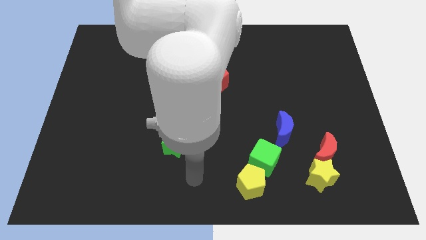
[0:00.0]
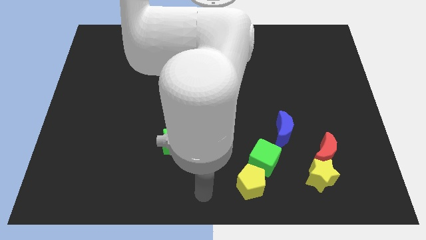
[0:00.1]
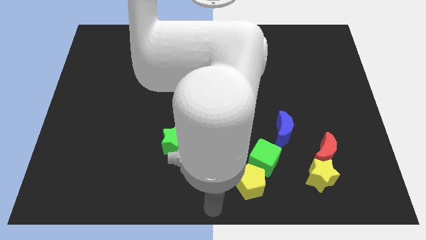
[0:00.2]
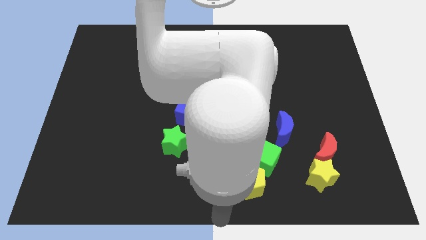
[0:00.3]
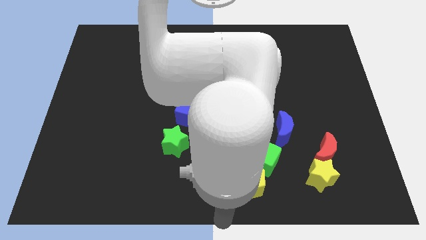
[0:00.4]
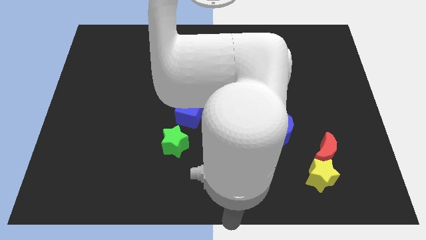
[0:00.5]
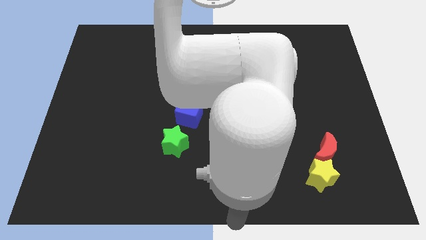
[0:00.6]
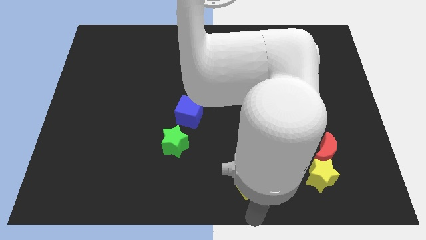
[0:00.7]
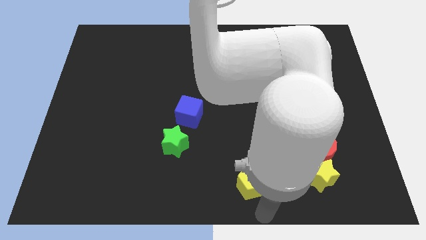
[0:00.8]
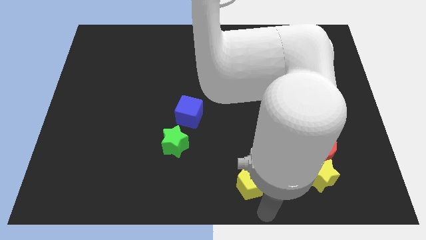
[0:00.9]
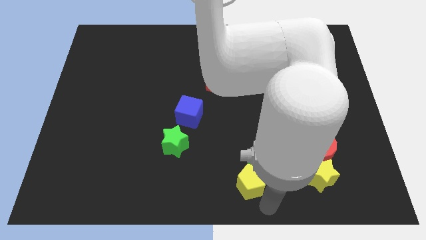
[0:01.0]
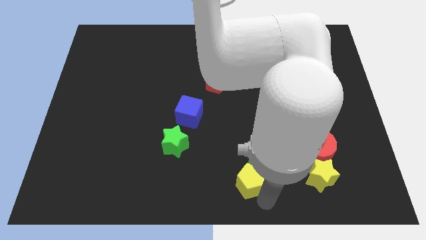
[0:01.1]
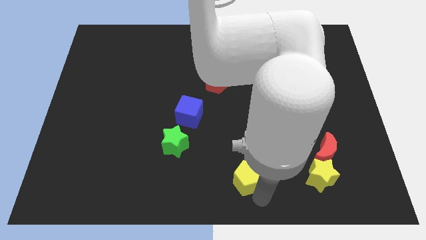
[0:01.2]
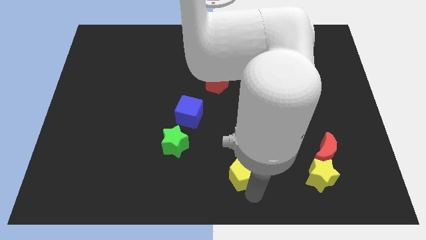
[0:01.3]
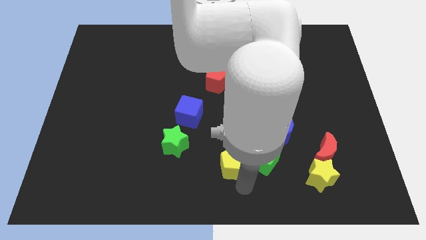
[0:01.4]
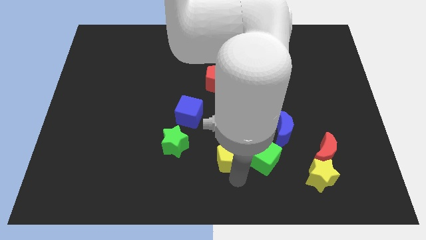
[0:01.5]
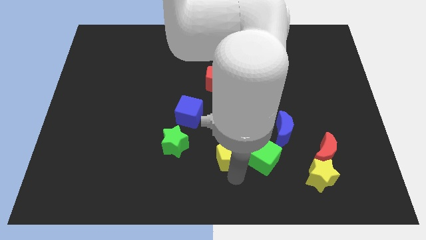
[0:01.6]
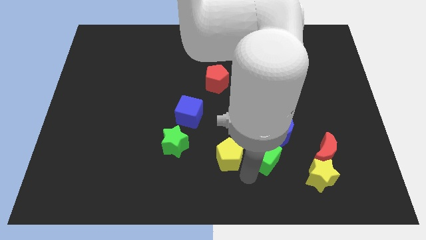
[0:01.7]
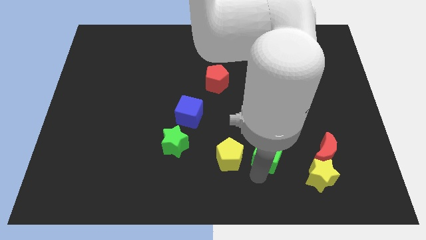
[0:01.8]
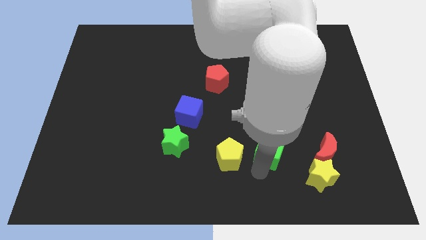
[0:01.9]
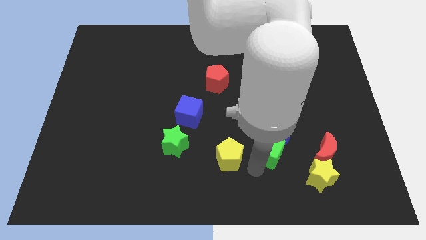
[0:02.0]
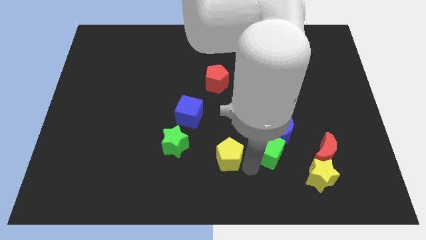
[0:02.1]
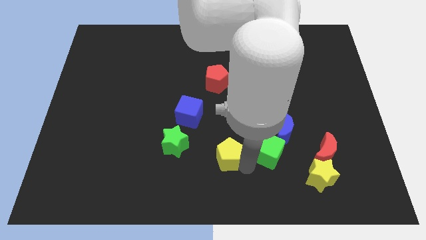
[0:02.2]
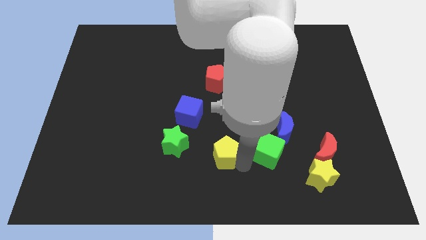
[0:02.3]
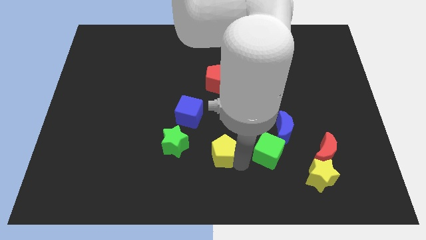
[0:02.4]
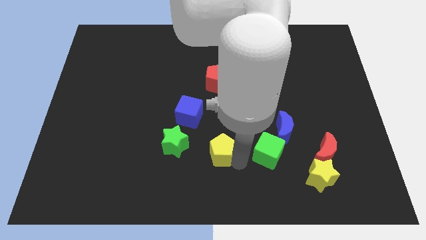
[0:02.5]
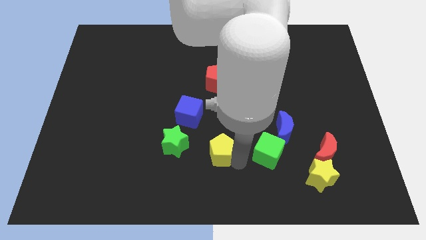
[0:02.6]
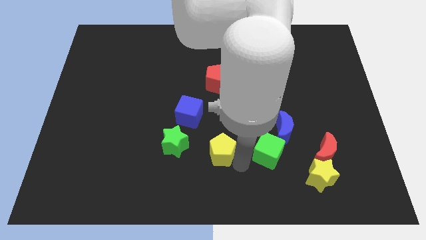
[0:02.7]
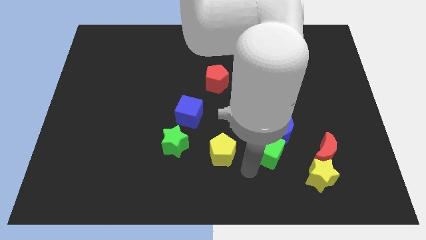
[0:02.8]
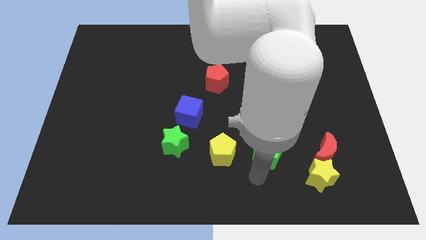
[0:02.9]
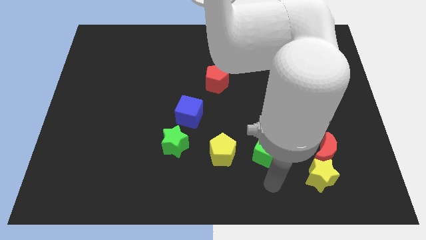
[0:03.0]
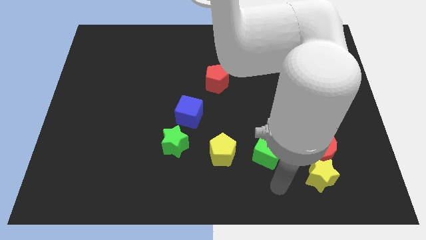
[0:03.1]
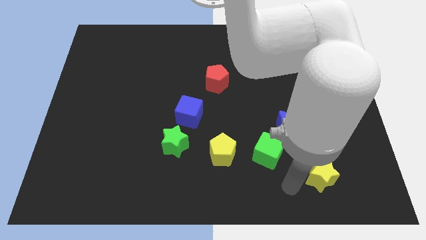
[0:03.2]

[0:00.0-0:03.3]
place the yellow pentagon between the green star and green cube

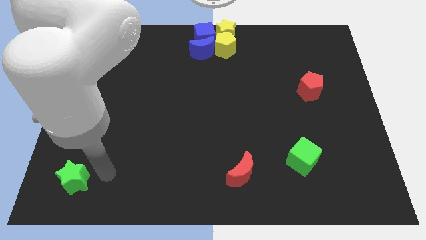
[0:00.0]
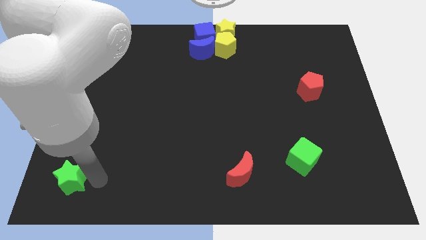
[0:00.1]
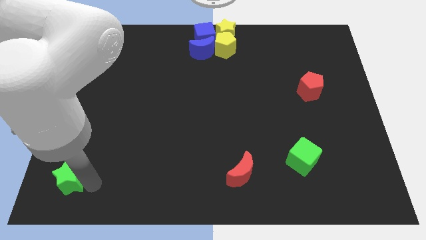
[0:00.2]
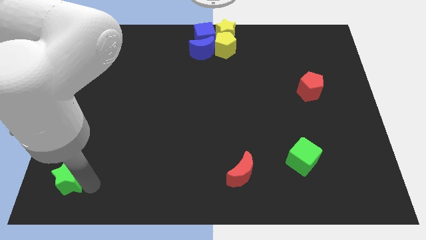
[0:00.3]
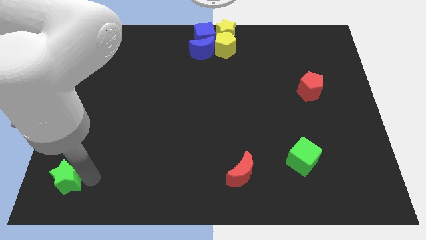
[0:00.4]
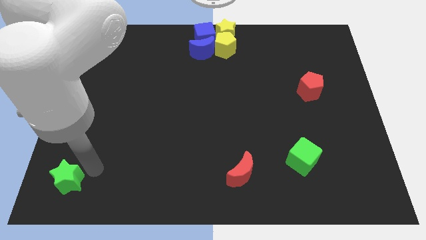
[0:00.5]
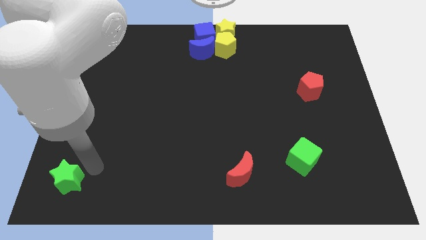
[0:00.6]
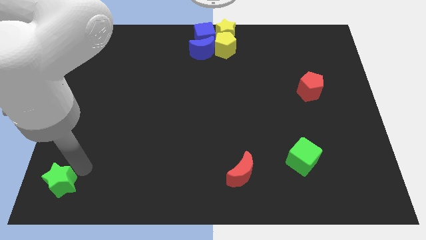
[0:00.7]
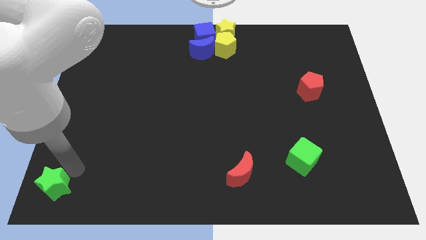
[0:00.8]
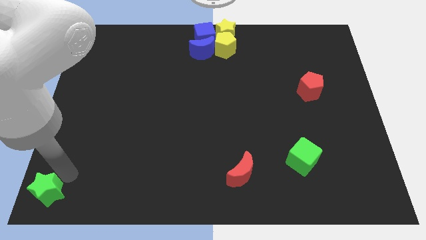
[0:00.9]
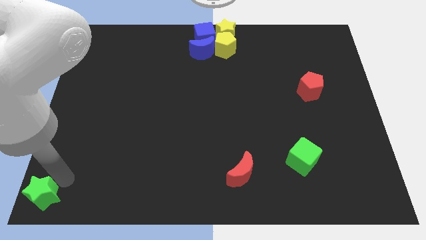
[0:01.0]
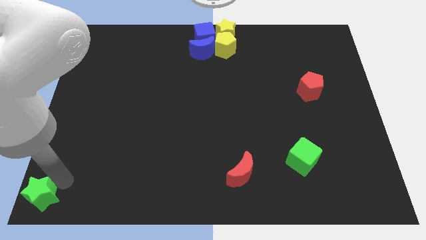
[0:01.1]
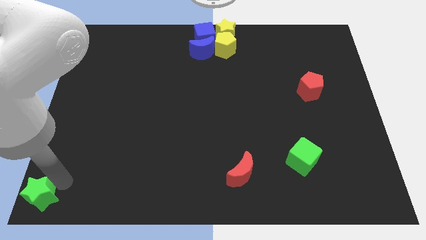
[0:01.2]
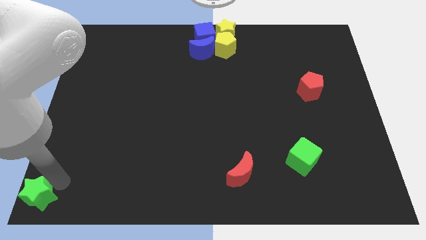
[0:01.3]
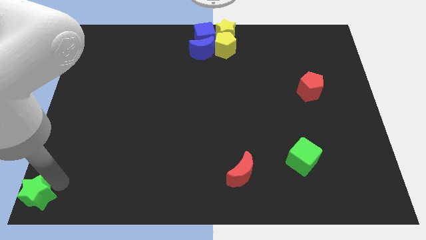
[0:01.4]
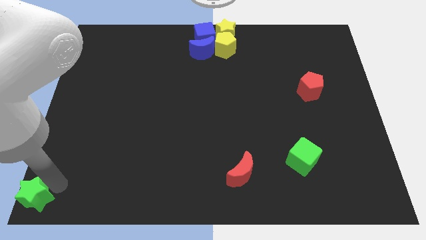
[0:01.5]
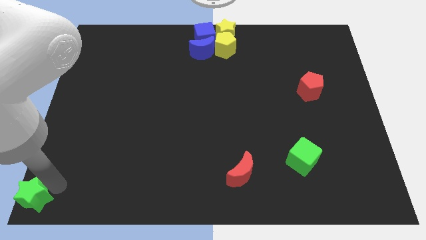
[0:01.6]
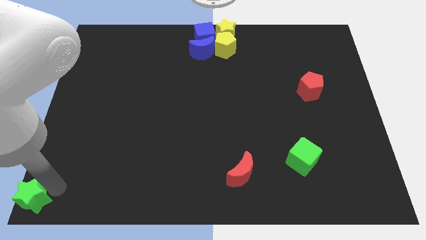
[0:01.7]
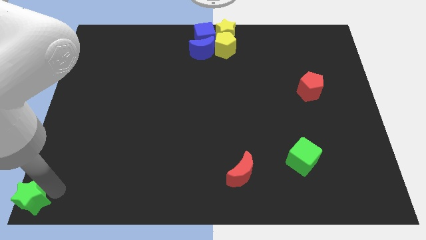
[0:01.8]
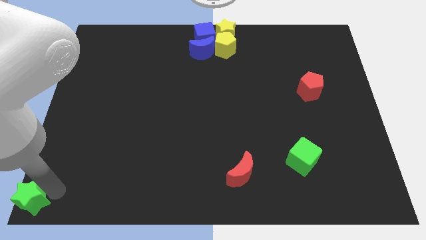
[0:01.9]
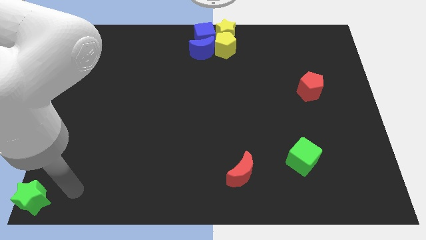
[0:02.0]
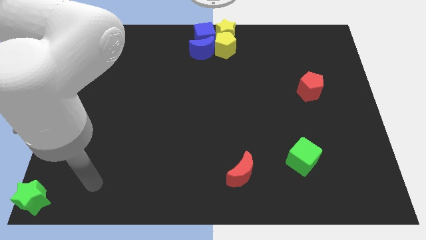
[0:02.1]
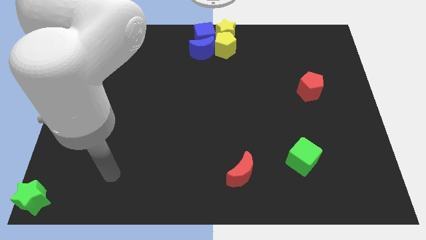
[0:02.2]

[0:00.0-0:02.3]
place the green star at the bottom left corner

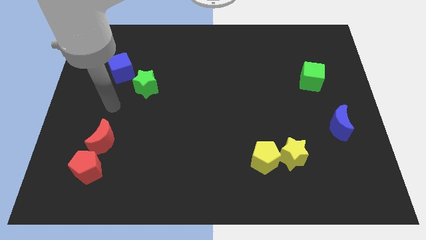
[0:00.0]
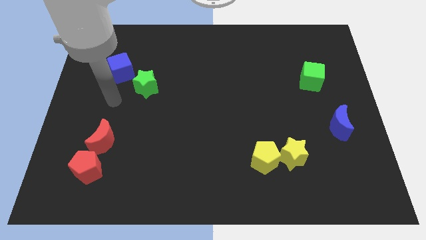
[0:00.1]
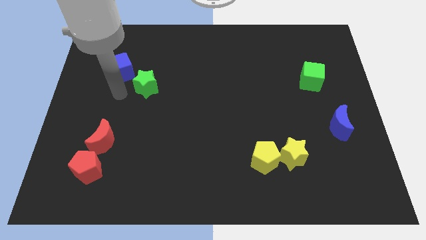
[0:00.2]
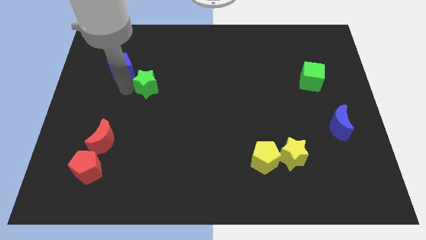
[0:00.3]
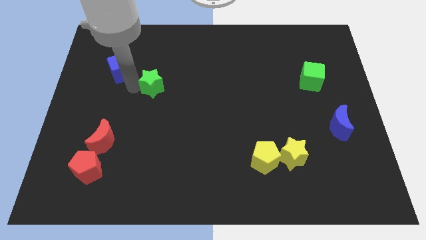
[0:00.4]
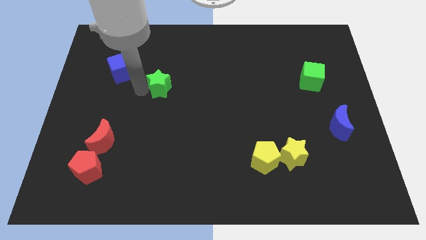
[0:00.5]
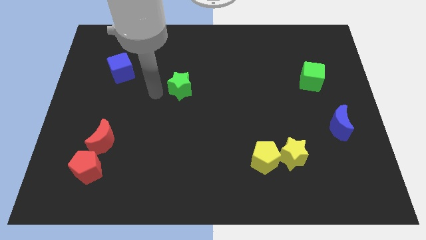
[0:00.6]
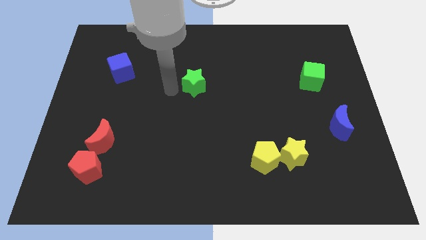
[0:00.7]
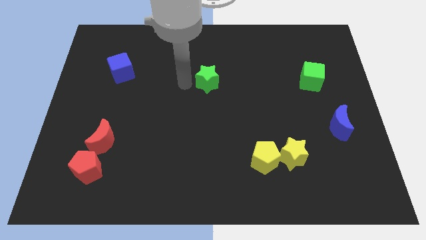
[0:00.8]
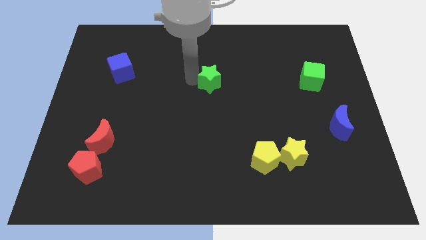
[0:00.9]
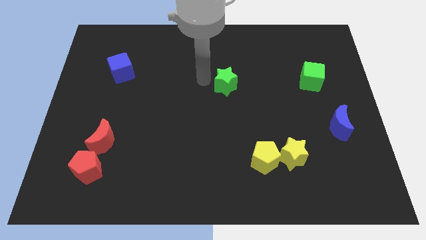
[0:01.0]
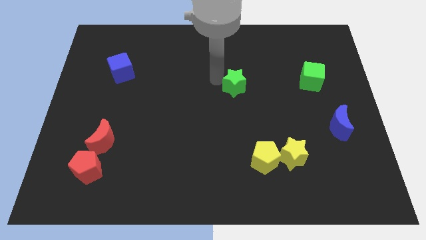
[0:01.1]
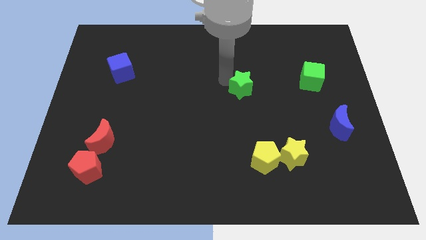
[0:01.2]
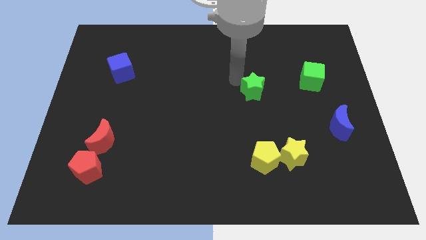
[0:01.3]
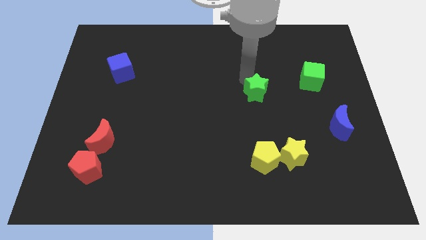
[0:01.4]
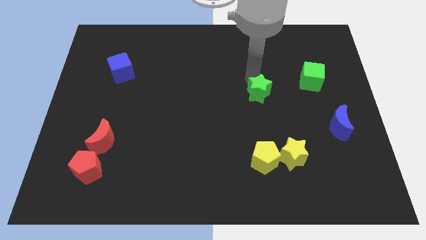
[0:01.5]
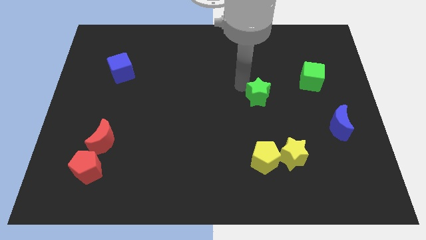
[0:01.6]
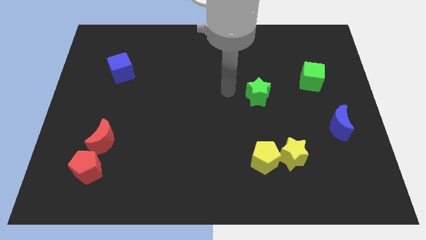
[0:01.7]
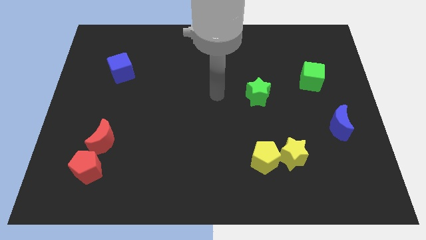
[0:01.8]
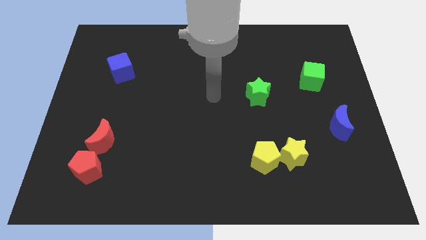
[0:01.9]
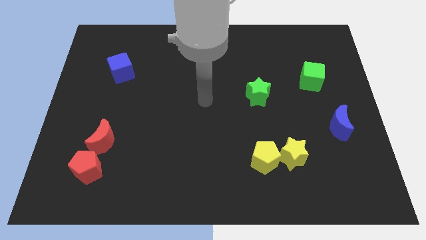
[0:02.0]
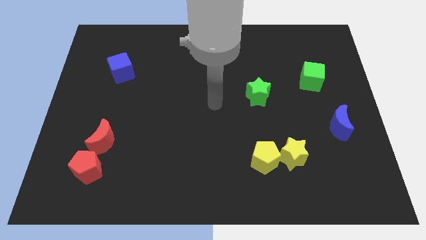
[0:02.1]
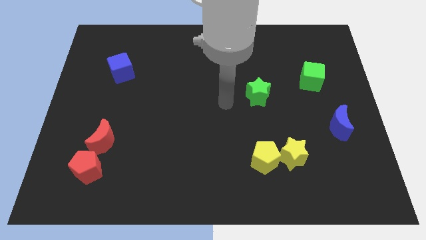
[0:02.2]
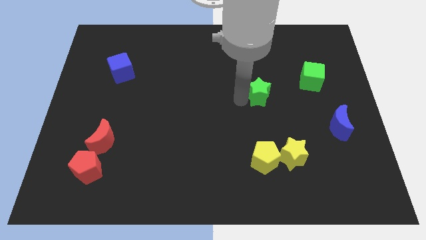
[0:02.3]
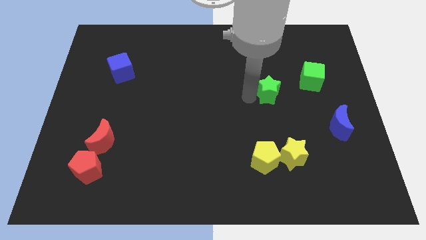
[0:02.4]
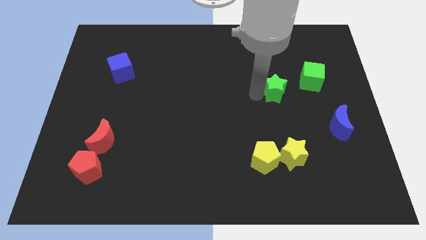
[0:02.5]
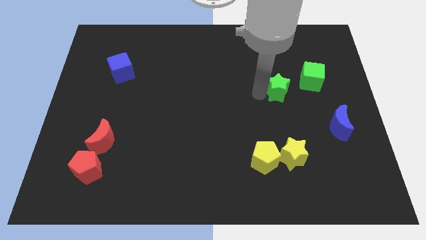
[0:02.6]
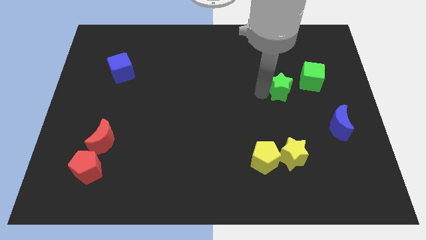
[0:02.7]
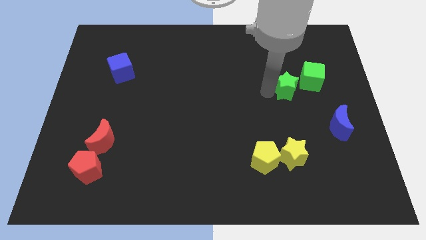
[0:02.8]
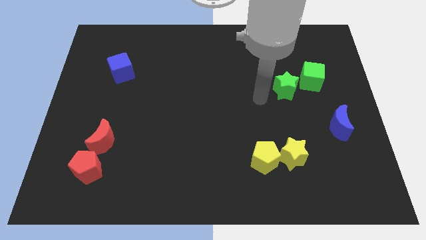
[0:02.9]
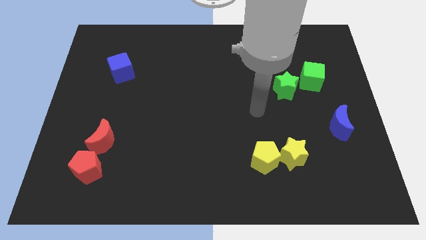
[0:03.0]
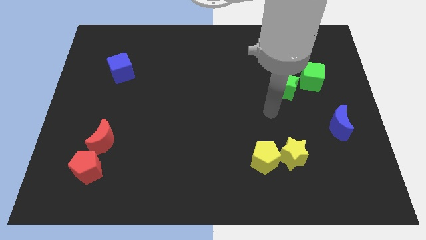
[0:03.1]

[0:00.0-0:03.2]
push the green star to the left side of the green cube

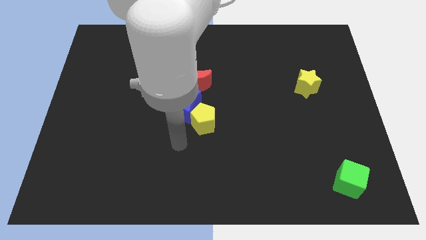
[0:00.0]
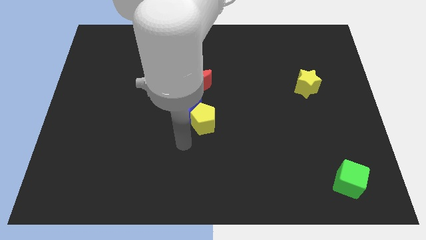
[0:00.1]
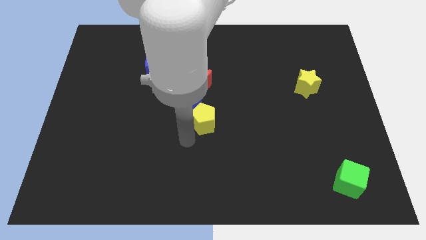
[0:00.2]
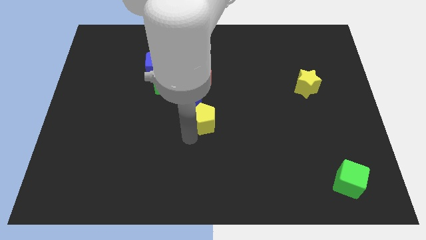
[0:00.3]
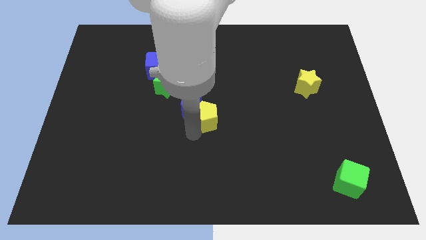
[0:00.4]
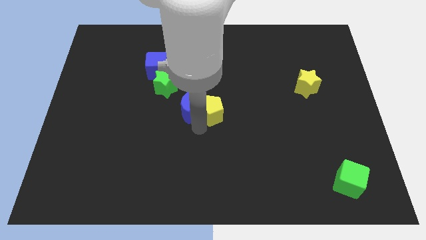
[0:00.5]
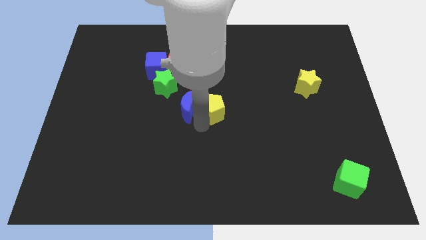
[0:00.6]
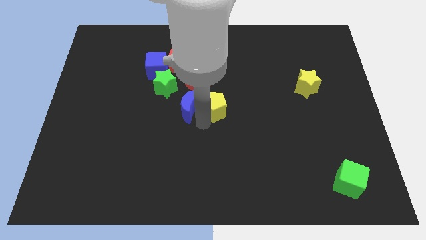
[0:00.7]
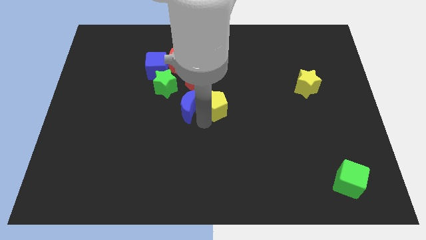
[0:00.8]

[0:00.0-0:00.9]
place the yellow pentagon right to the blue moon
